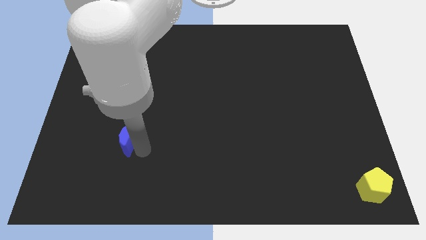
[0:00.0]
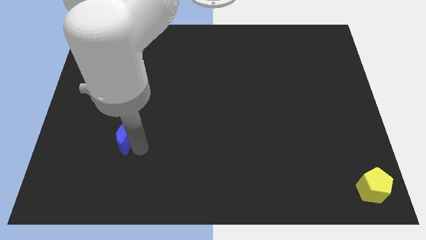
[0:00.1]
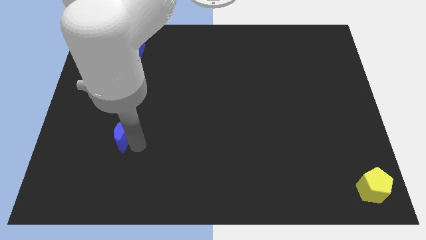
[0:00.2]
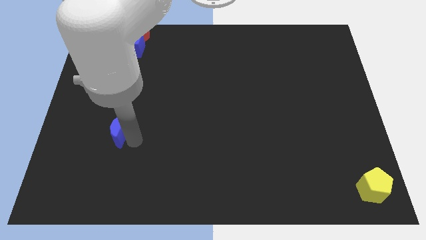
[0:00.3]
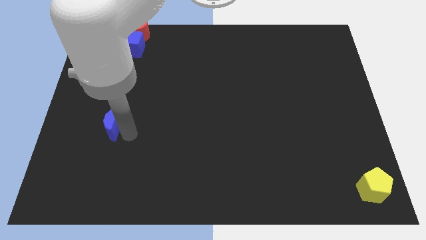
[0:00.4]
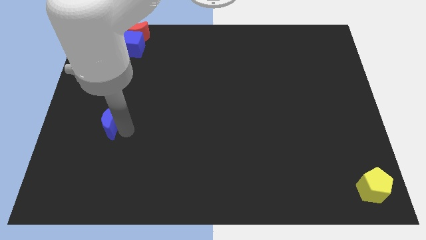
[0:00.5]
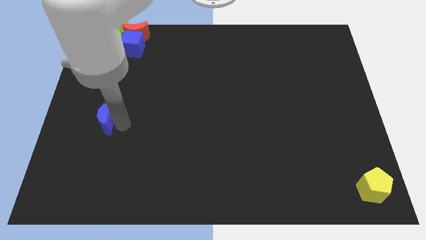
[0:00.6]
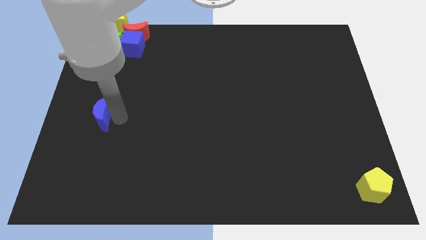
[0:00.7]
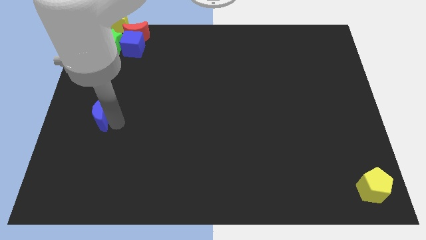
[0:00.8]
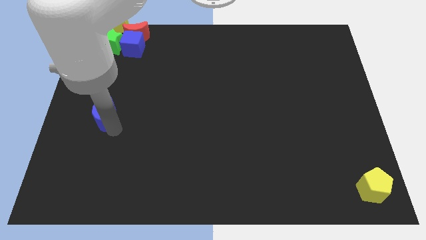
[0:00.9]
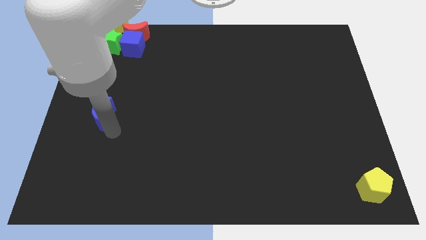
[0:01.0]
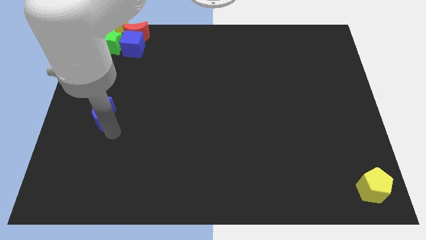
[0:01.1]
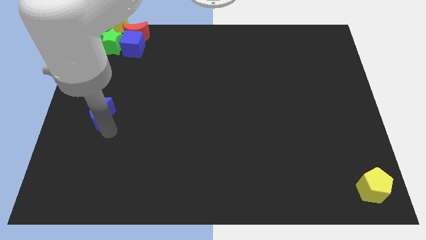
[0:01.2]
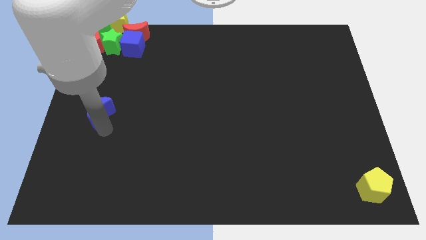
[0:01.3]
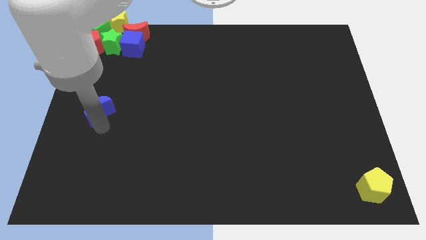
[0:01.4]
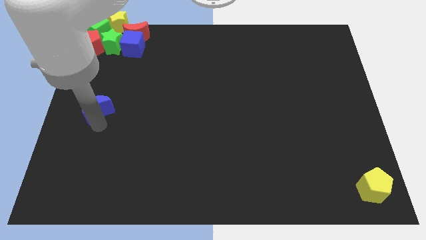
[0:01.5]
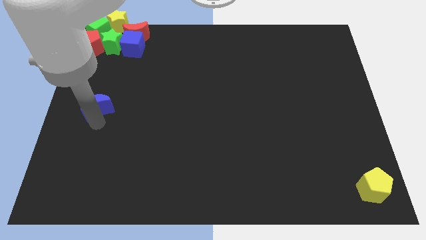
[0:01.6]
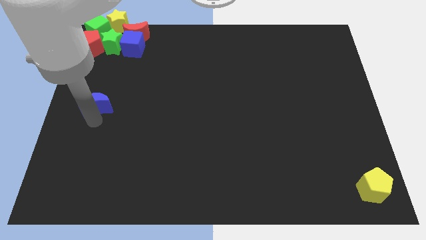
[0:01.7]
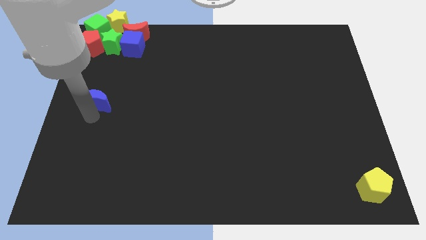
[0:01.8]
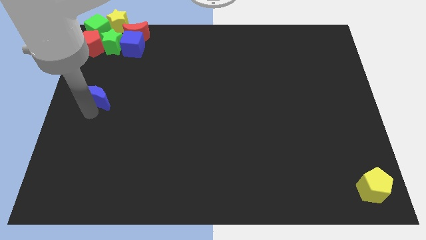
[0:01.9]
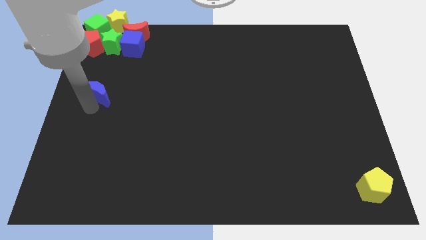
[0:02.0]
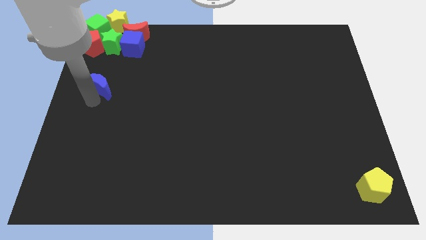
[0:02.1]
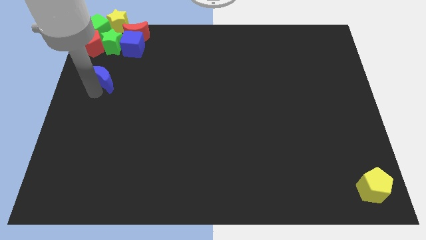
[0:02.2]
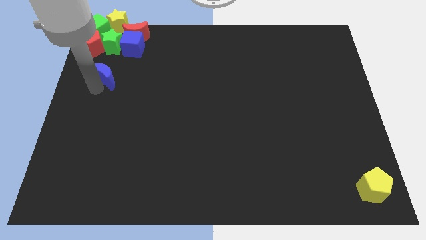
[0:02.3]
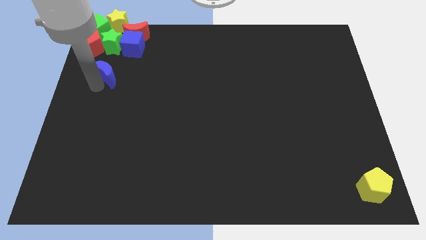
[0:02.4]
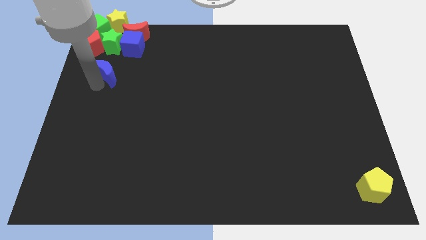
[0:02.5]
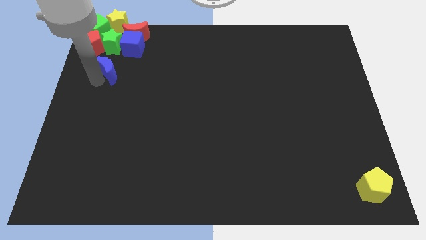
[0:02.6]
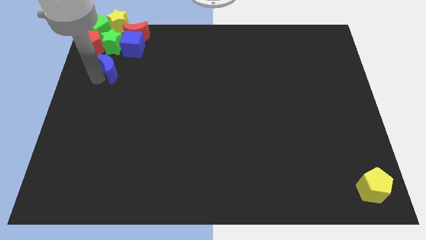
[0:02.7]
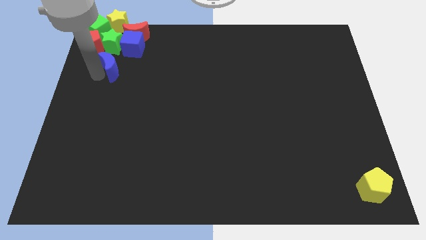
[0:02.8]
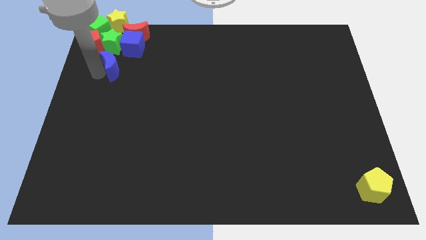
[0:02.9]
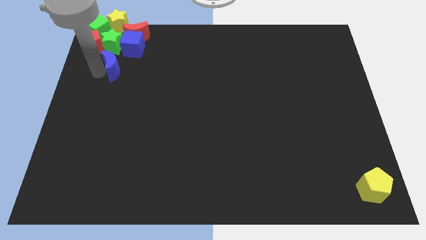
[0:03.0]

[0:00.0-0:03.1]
push the blue moon towards the group of blocks

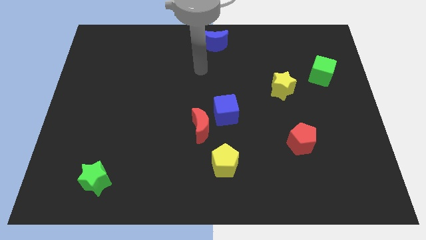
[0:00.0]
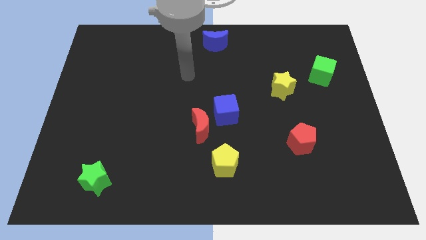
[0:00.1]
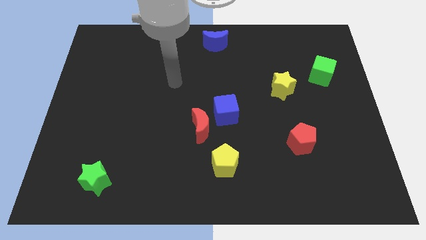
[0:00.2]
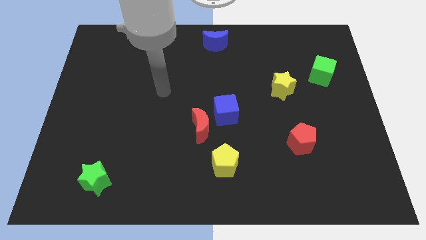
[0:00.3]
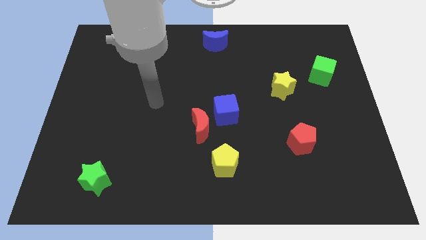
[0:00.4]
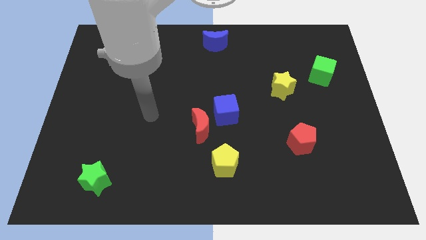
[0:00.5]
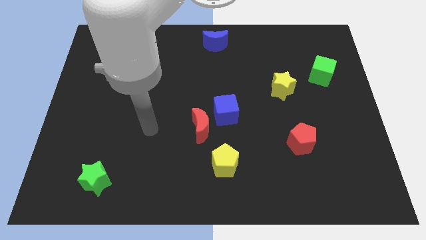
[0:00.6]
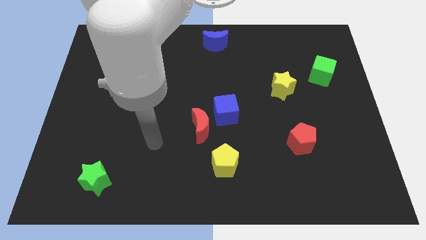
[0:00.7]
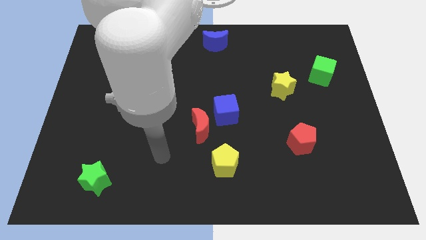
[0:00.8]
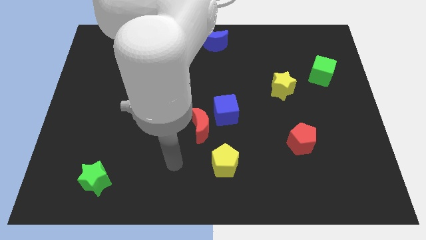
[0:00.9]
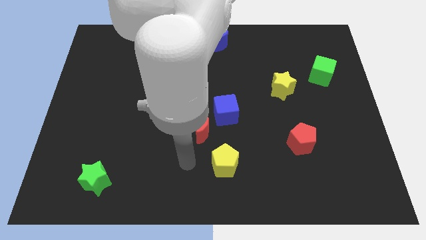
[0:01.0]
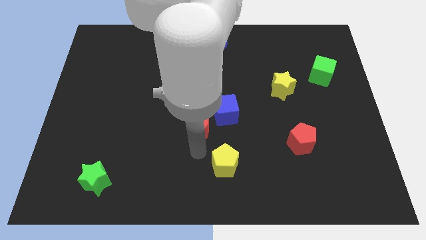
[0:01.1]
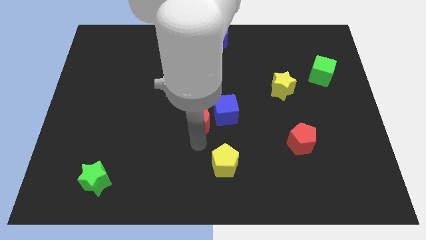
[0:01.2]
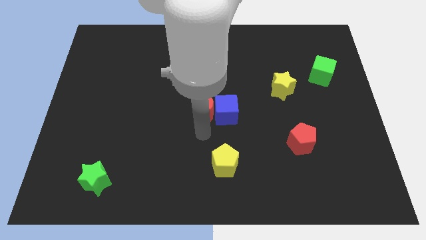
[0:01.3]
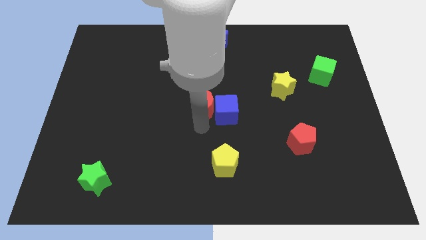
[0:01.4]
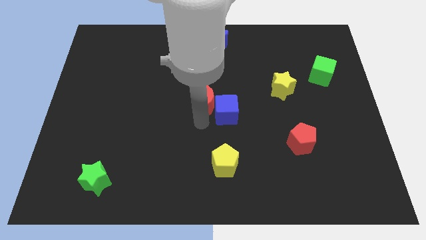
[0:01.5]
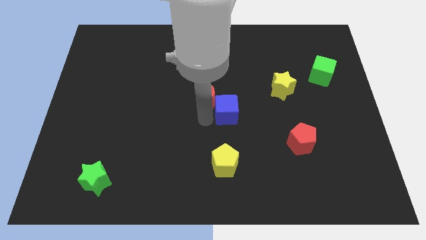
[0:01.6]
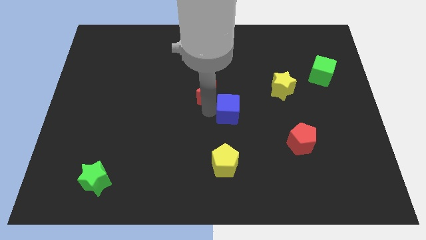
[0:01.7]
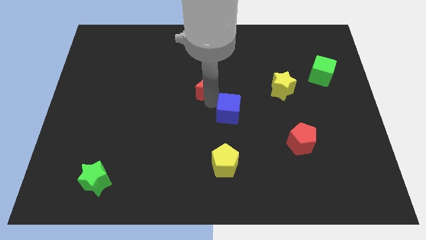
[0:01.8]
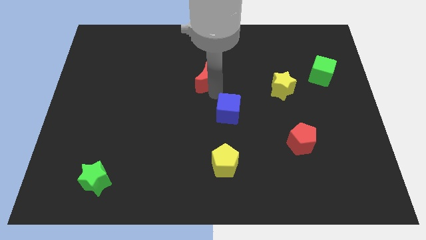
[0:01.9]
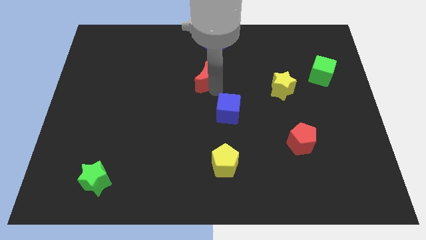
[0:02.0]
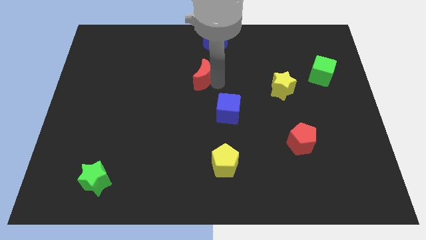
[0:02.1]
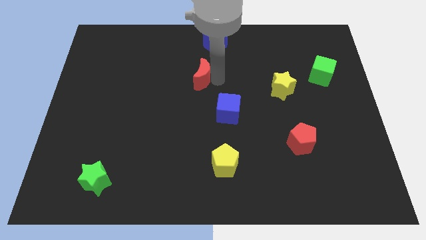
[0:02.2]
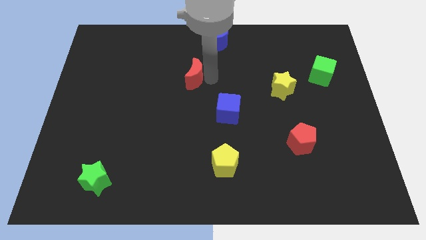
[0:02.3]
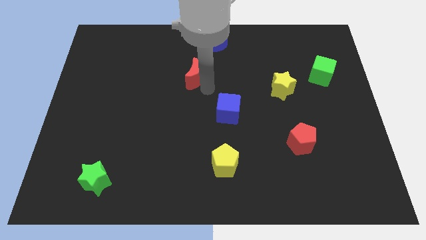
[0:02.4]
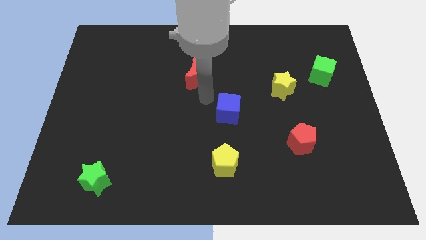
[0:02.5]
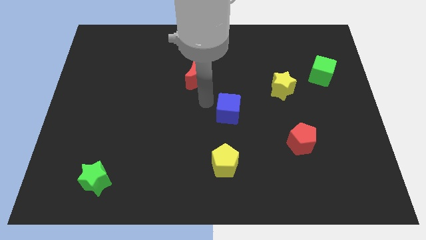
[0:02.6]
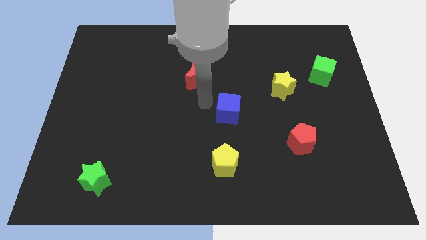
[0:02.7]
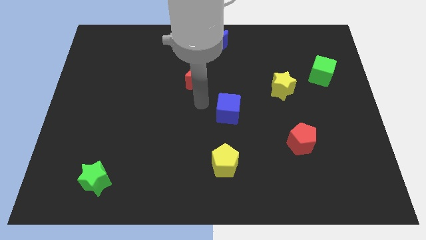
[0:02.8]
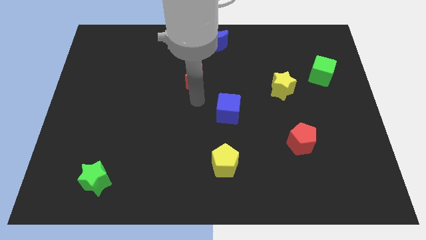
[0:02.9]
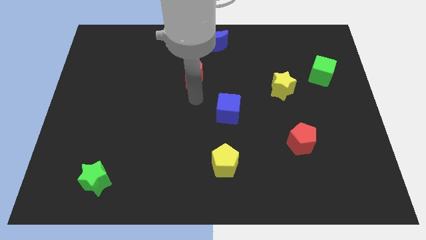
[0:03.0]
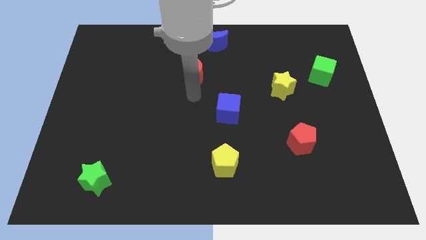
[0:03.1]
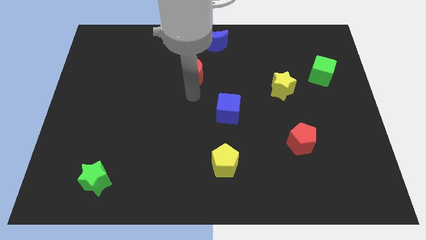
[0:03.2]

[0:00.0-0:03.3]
slide the red crescent up slightly

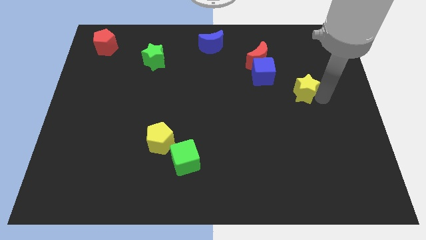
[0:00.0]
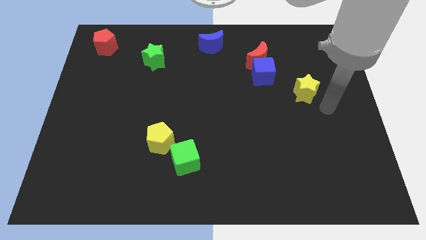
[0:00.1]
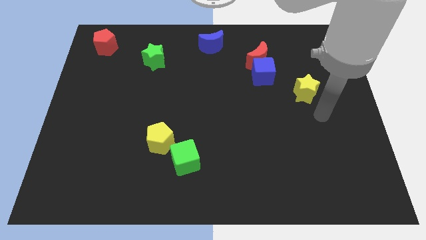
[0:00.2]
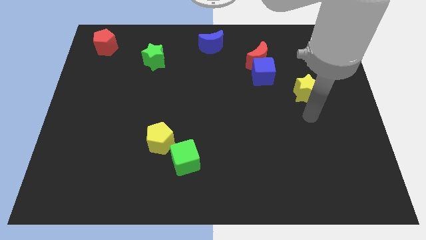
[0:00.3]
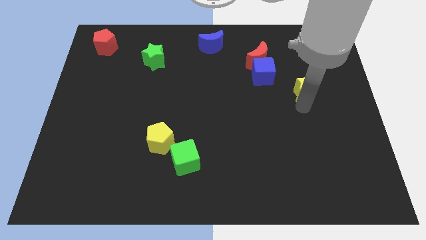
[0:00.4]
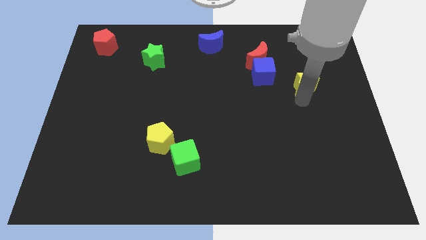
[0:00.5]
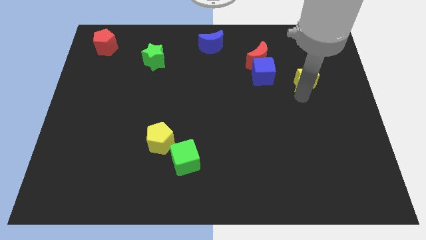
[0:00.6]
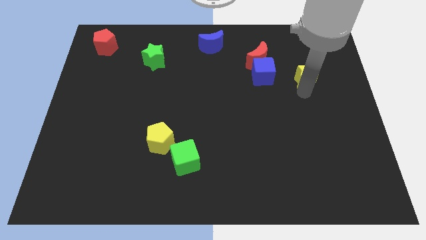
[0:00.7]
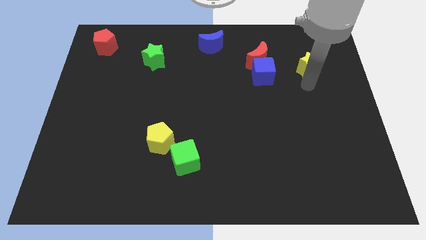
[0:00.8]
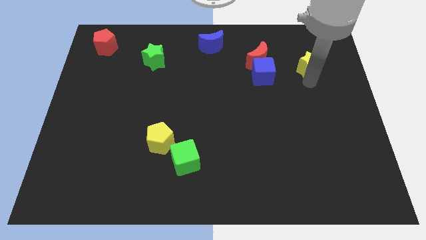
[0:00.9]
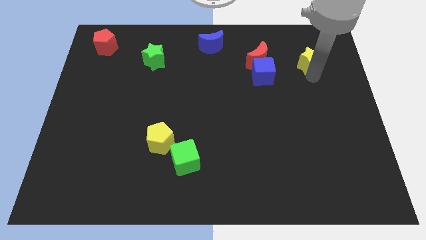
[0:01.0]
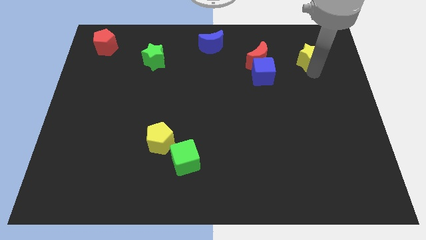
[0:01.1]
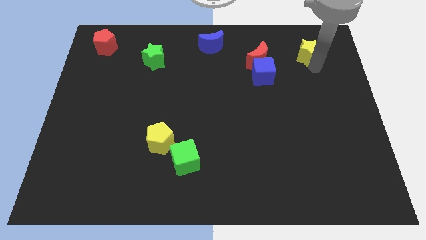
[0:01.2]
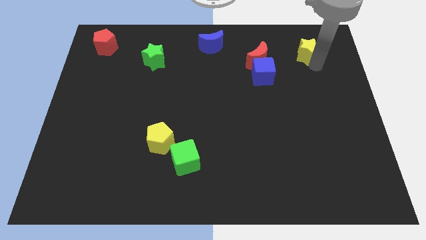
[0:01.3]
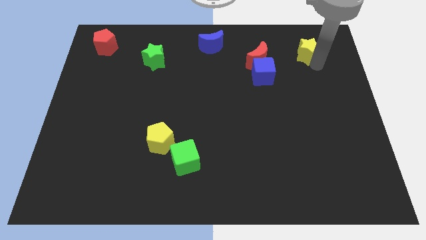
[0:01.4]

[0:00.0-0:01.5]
push the yellow star towards up

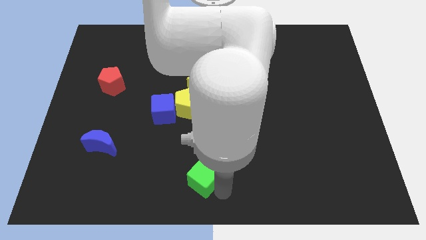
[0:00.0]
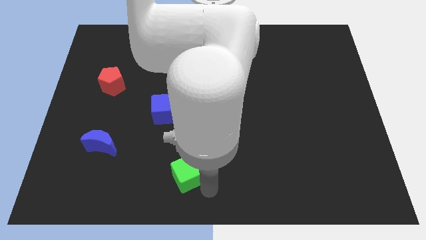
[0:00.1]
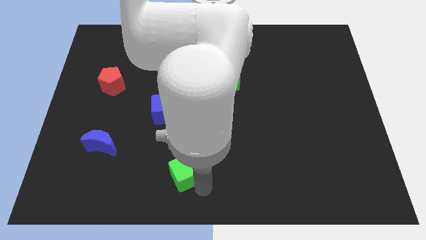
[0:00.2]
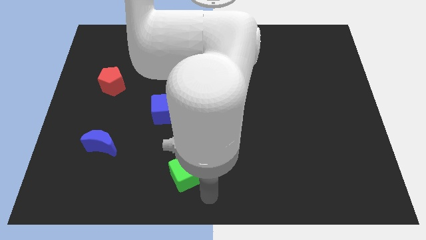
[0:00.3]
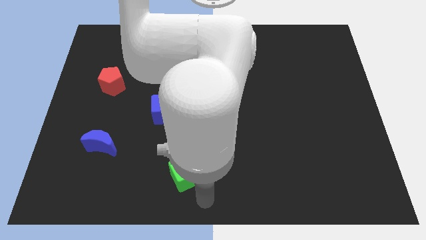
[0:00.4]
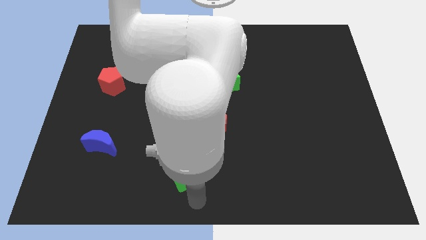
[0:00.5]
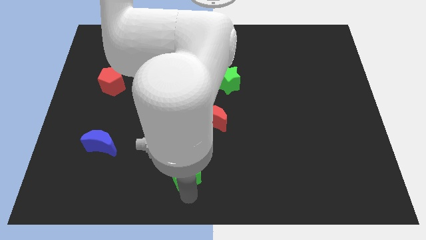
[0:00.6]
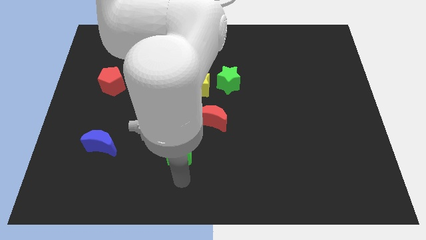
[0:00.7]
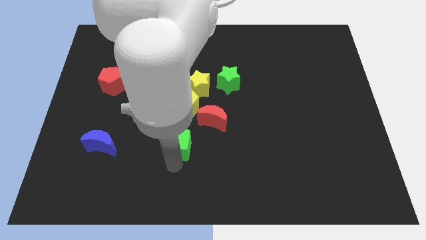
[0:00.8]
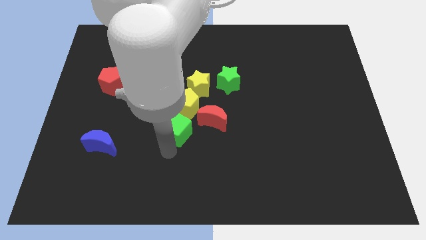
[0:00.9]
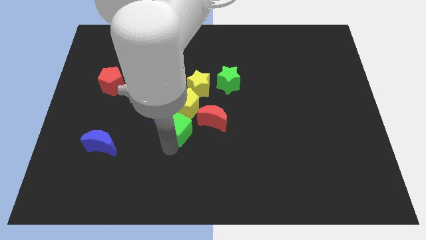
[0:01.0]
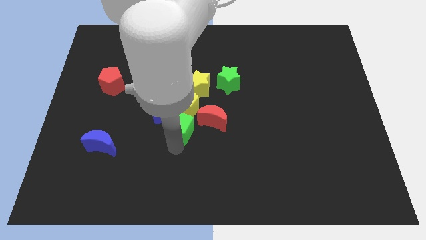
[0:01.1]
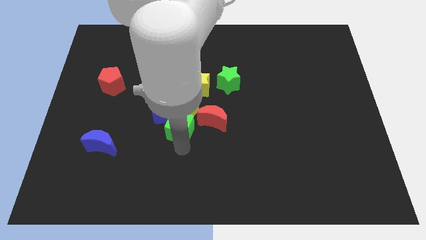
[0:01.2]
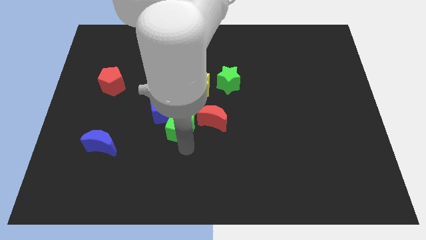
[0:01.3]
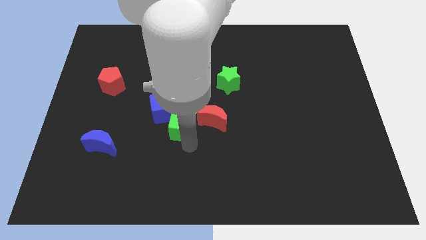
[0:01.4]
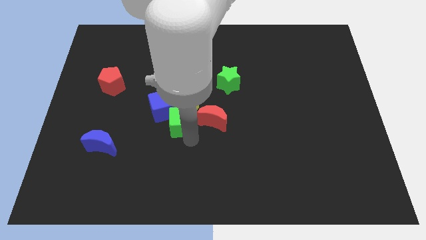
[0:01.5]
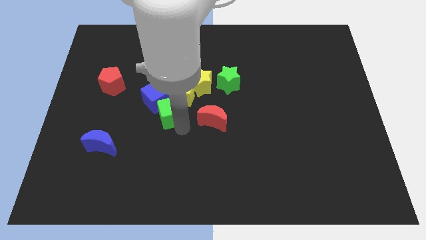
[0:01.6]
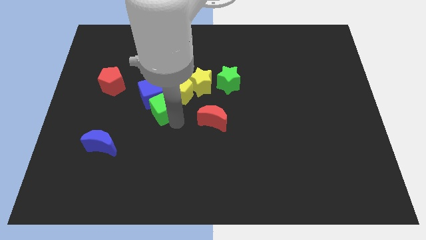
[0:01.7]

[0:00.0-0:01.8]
move the green cube to the blue cube
